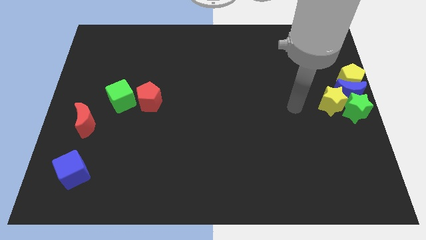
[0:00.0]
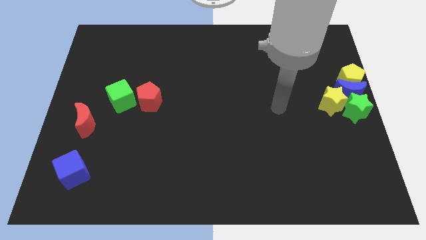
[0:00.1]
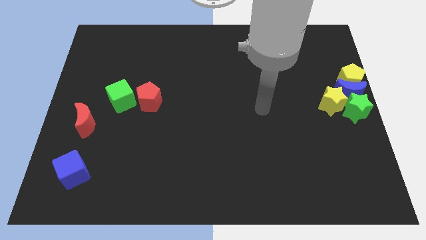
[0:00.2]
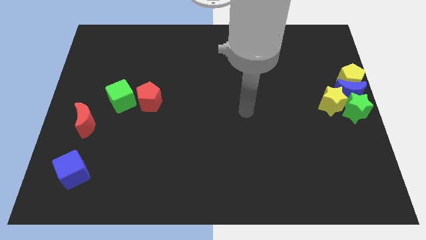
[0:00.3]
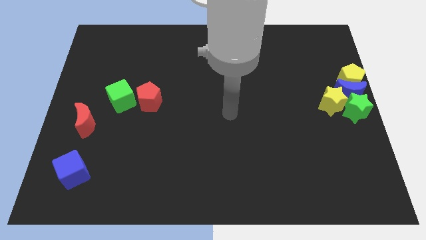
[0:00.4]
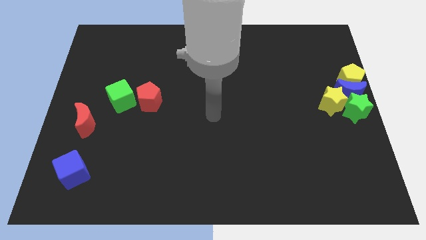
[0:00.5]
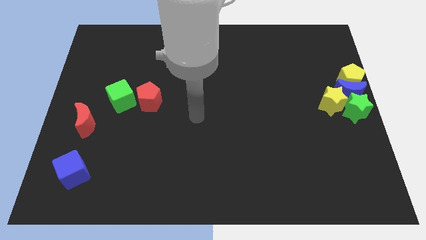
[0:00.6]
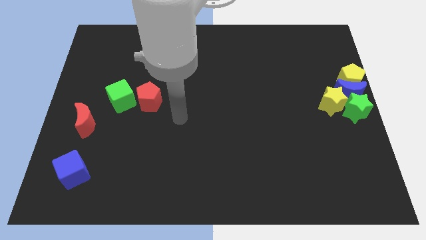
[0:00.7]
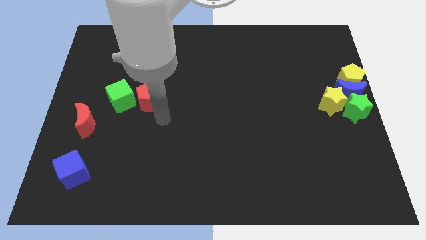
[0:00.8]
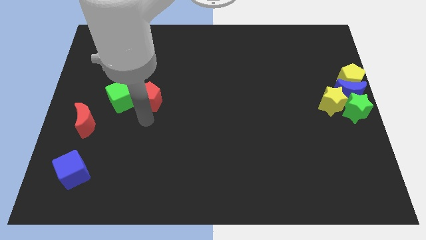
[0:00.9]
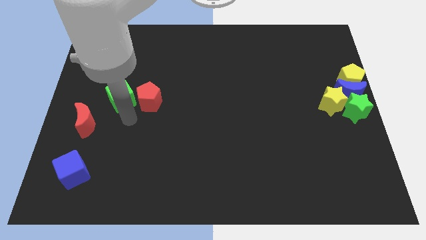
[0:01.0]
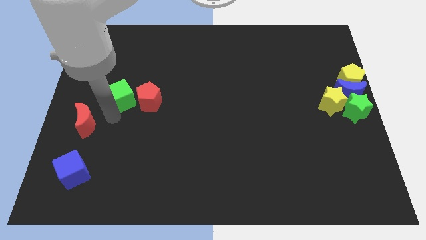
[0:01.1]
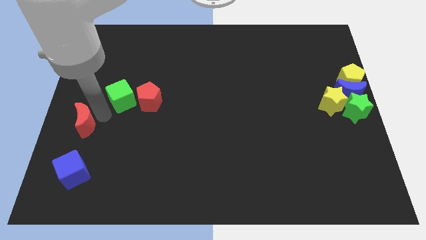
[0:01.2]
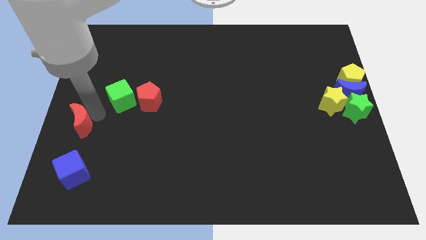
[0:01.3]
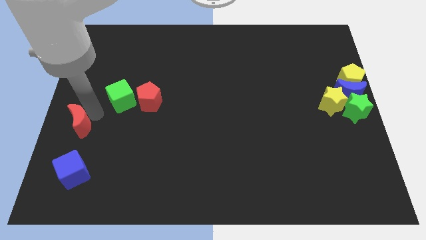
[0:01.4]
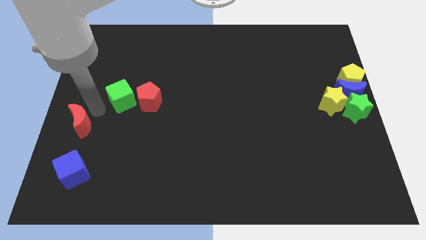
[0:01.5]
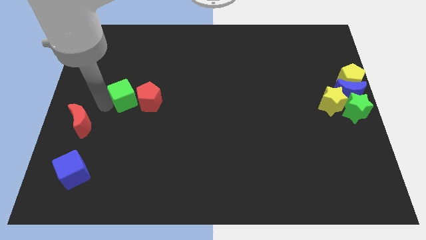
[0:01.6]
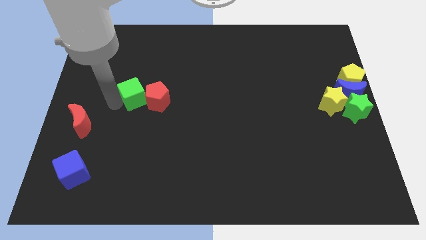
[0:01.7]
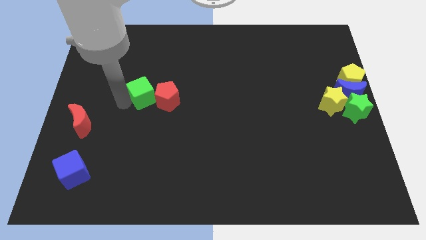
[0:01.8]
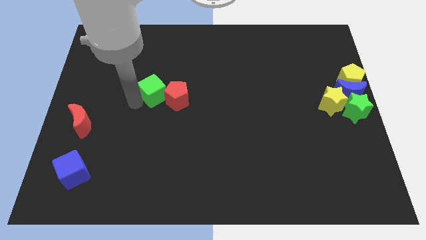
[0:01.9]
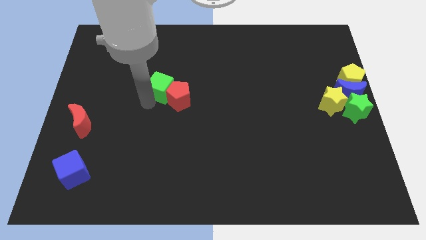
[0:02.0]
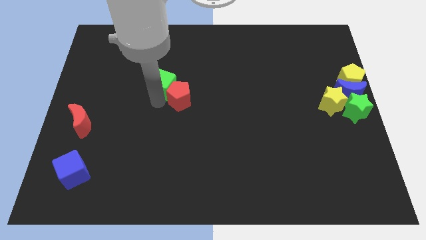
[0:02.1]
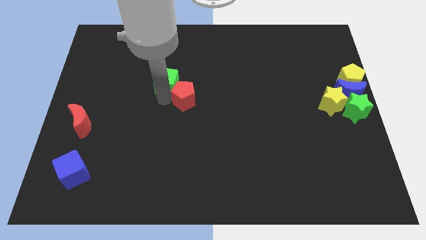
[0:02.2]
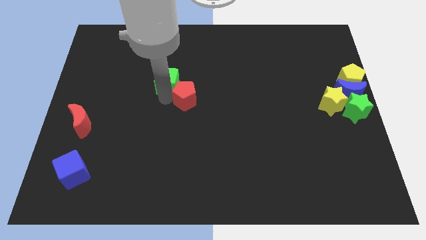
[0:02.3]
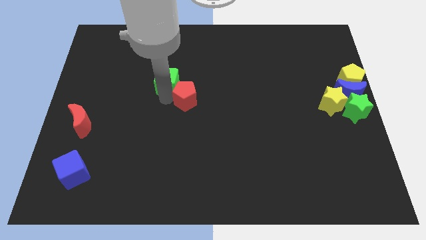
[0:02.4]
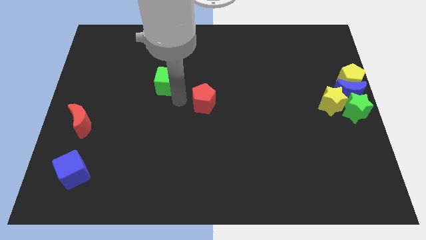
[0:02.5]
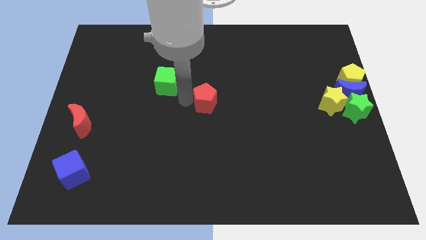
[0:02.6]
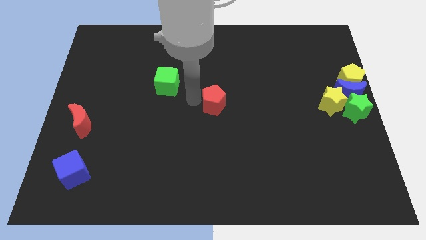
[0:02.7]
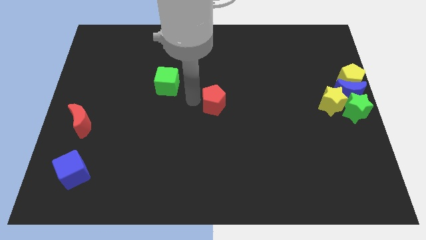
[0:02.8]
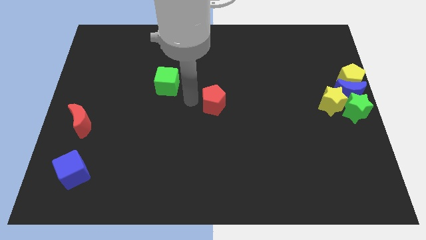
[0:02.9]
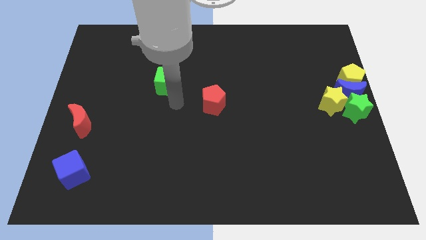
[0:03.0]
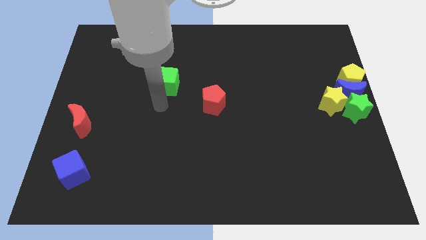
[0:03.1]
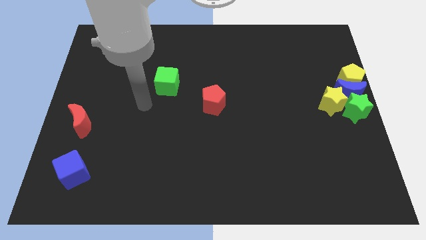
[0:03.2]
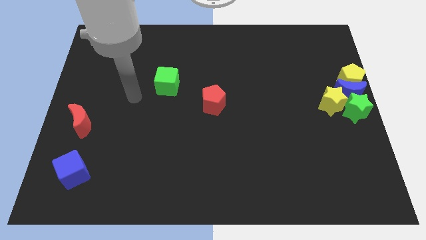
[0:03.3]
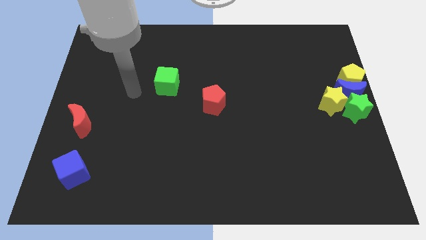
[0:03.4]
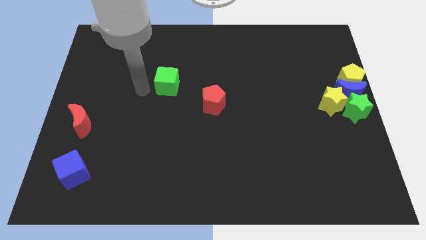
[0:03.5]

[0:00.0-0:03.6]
separate green cube from red pentagon

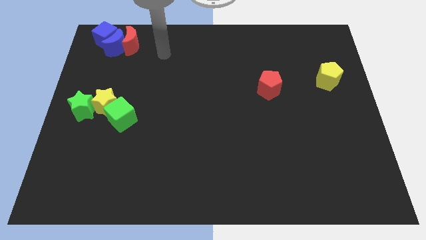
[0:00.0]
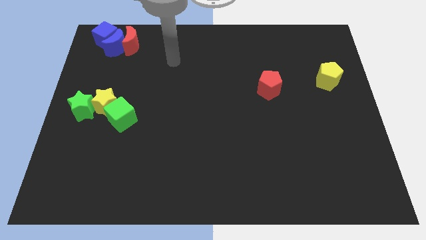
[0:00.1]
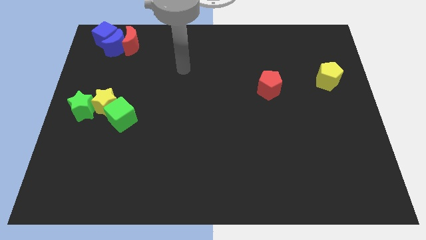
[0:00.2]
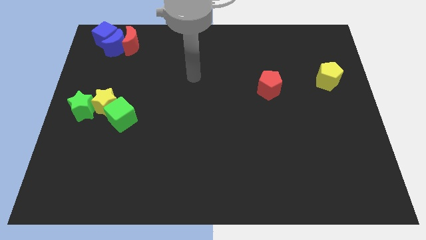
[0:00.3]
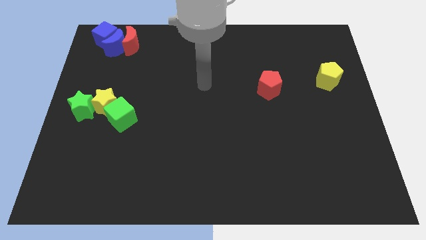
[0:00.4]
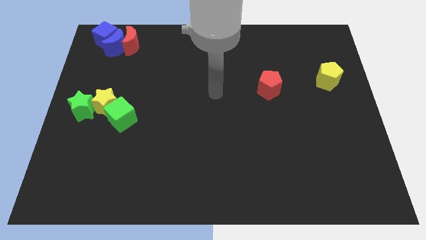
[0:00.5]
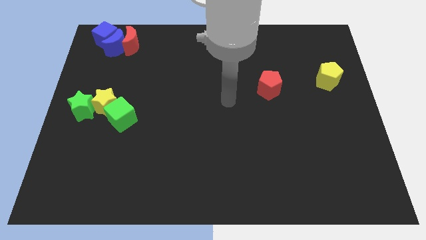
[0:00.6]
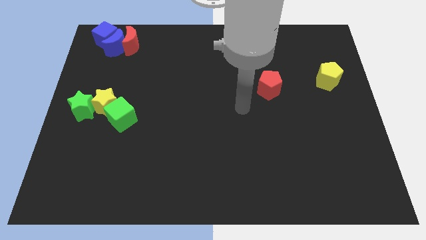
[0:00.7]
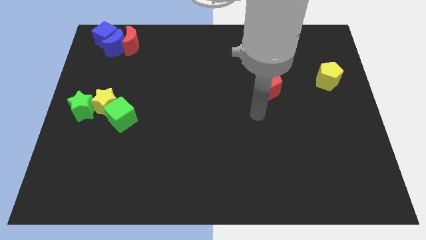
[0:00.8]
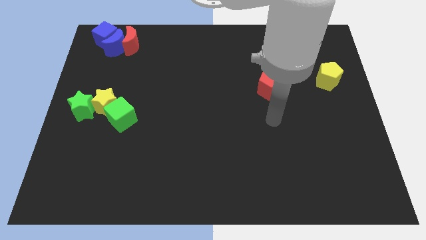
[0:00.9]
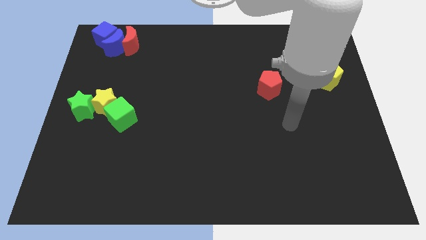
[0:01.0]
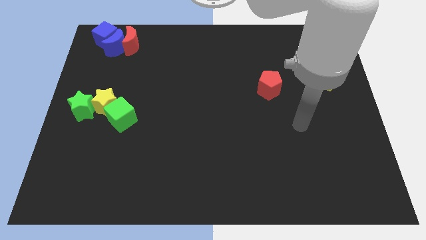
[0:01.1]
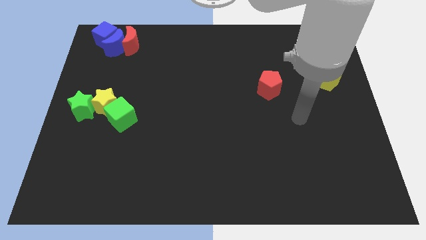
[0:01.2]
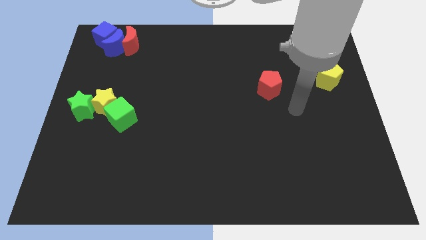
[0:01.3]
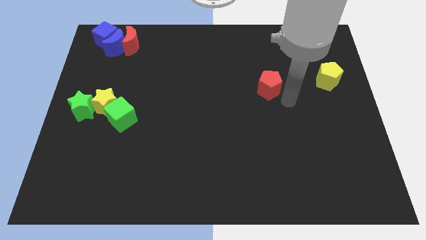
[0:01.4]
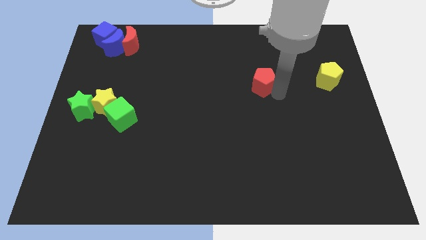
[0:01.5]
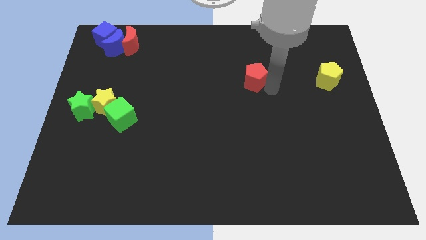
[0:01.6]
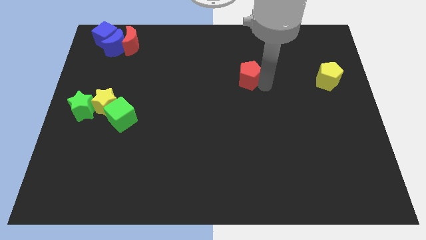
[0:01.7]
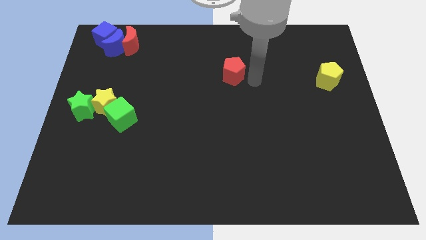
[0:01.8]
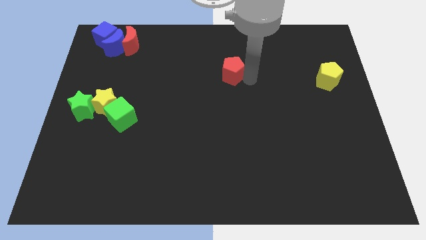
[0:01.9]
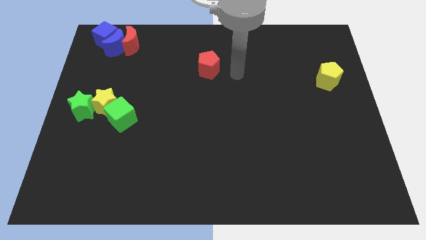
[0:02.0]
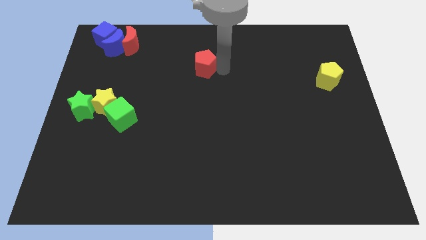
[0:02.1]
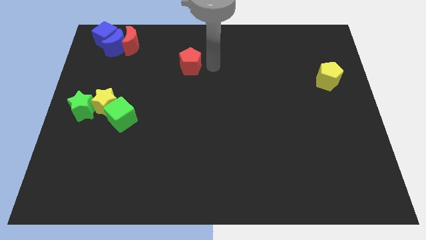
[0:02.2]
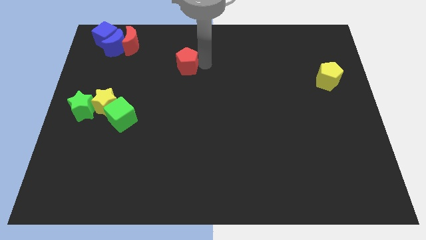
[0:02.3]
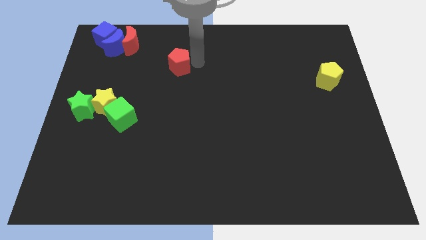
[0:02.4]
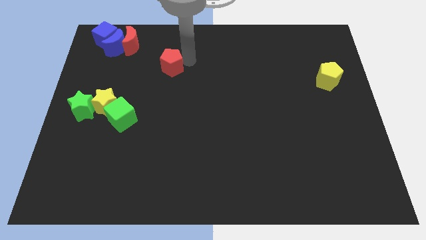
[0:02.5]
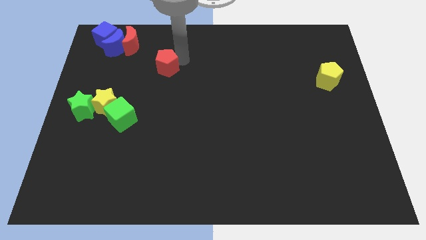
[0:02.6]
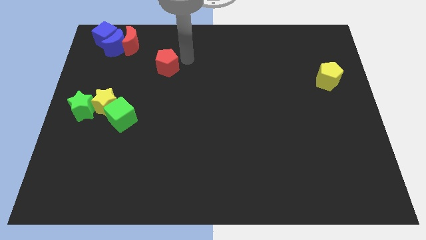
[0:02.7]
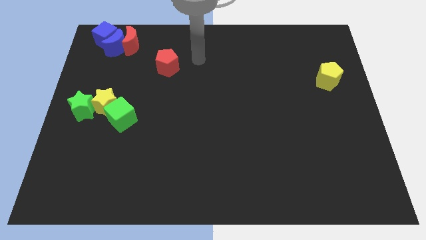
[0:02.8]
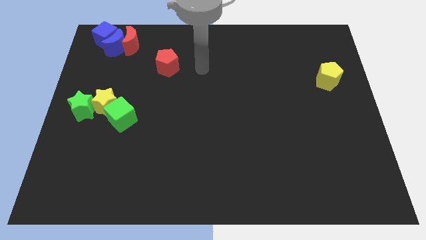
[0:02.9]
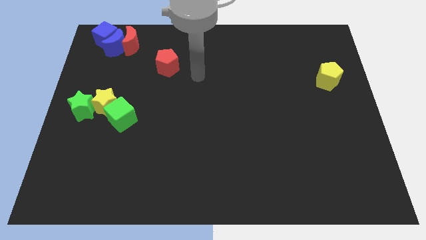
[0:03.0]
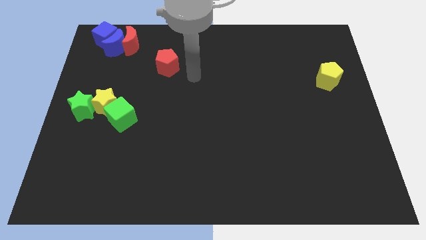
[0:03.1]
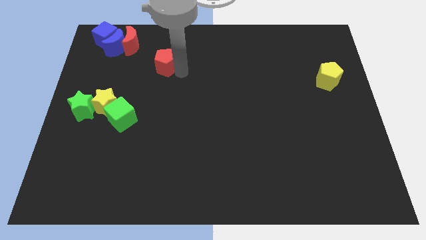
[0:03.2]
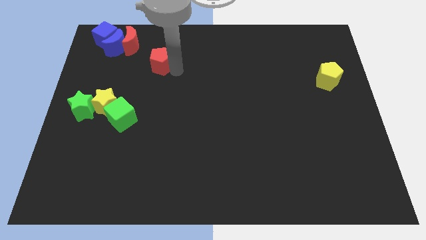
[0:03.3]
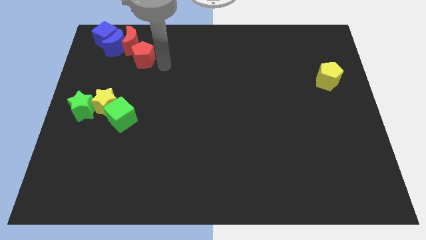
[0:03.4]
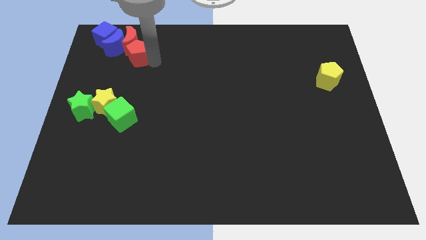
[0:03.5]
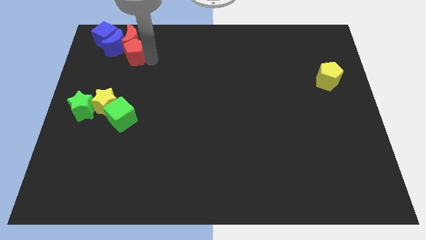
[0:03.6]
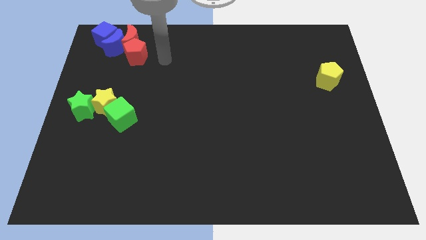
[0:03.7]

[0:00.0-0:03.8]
place the red pentagon close to the red crescent

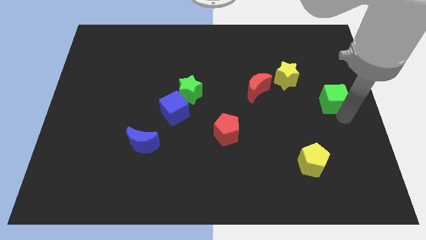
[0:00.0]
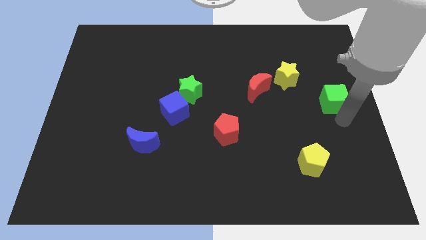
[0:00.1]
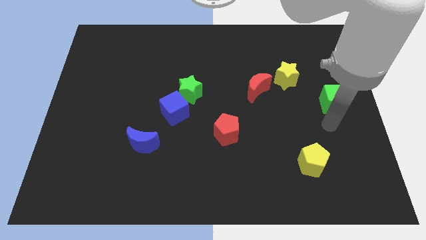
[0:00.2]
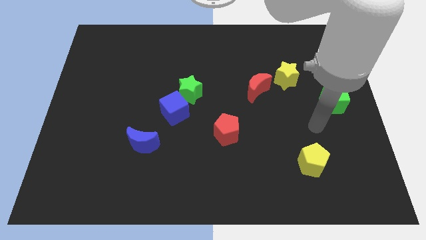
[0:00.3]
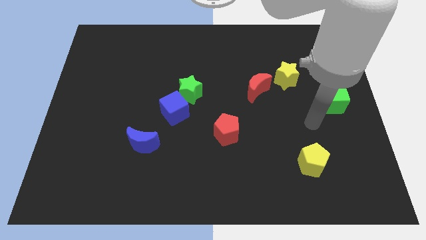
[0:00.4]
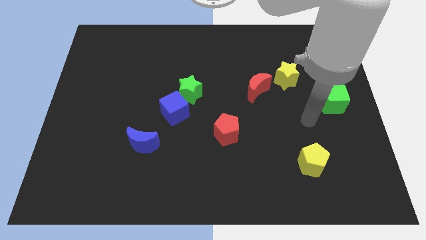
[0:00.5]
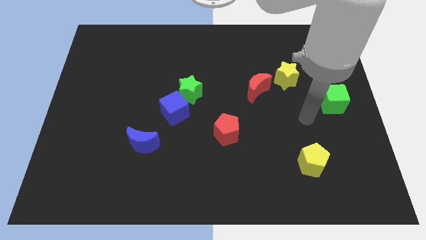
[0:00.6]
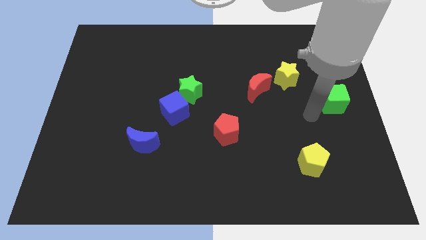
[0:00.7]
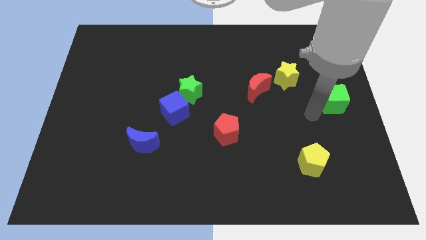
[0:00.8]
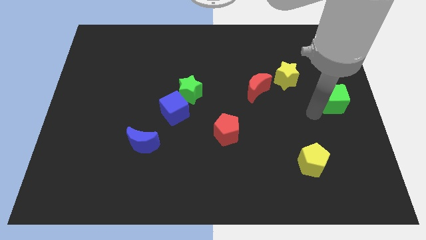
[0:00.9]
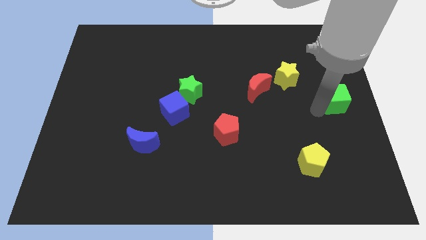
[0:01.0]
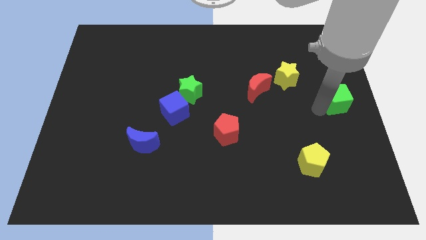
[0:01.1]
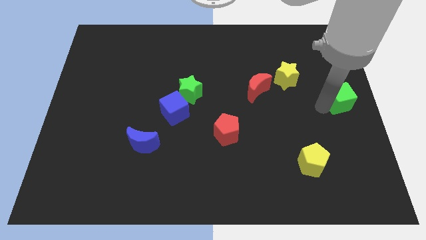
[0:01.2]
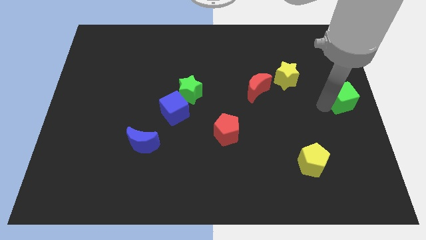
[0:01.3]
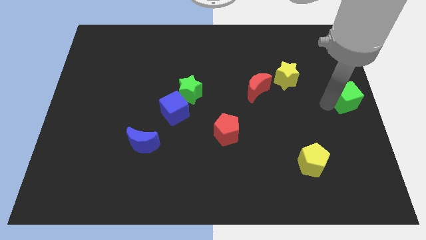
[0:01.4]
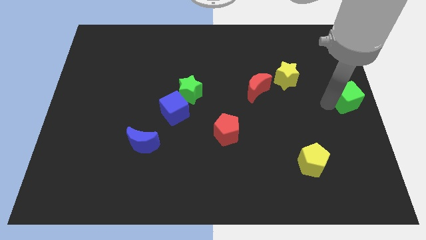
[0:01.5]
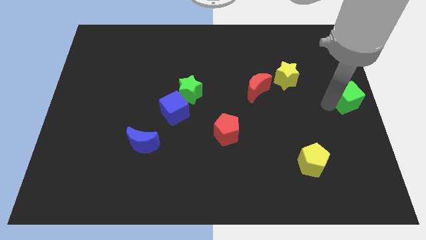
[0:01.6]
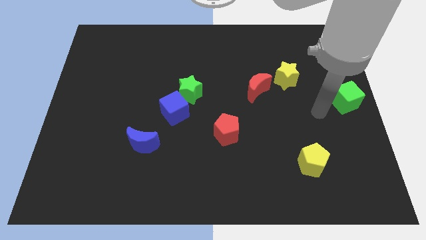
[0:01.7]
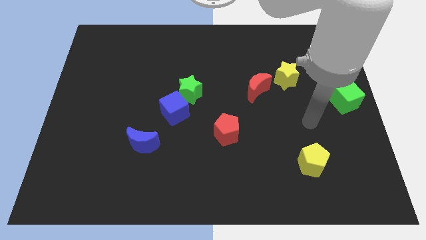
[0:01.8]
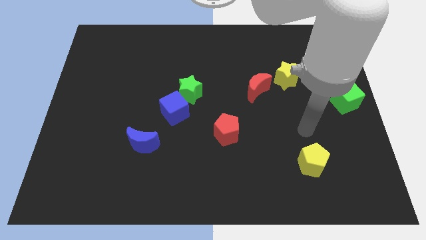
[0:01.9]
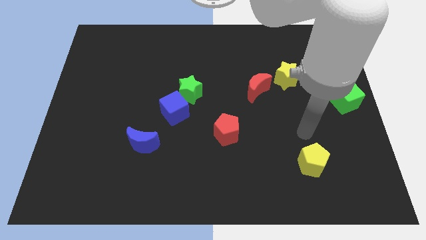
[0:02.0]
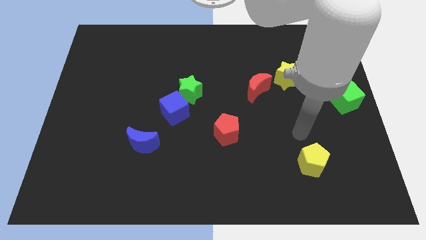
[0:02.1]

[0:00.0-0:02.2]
move the arm away from the green cube towards the center
